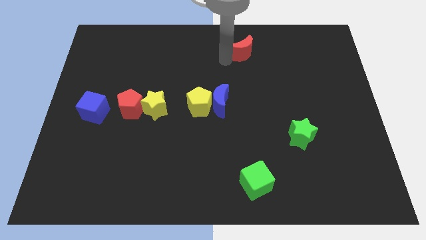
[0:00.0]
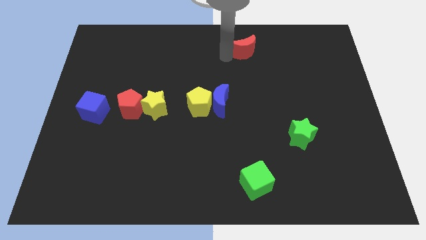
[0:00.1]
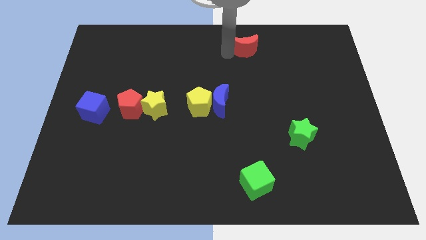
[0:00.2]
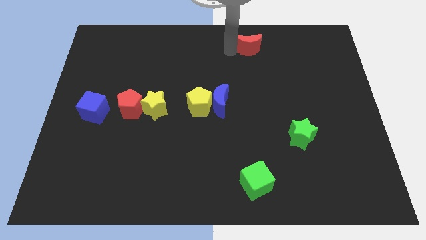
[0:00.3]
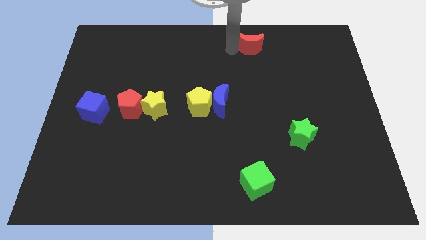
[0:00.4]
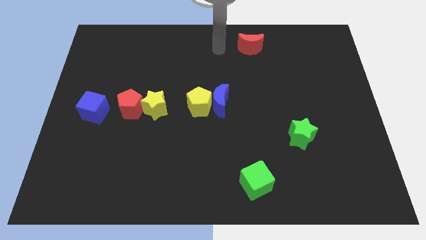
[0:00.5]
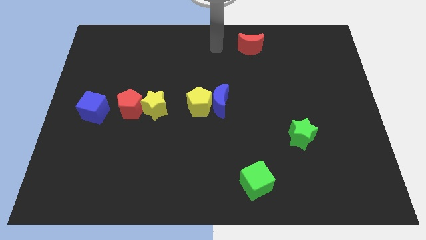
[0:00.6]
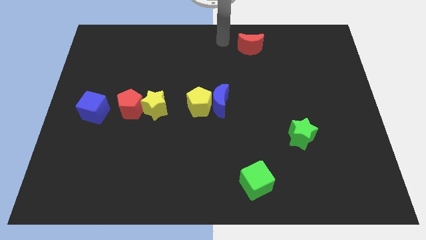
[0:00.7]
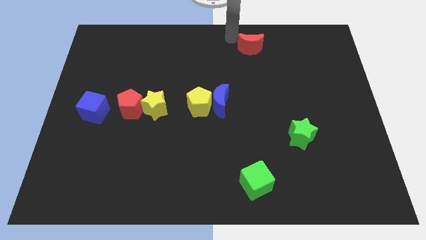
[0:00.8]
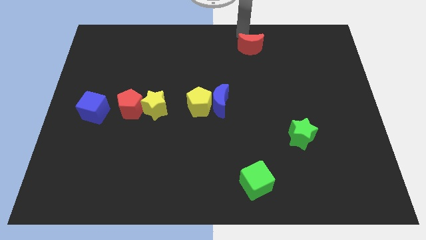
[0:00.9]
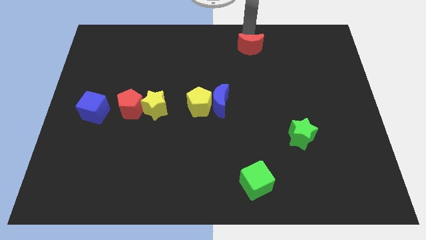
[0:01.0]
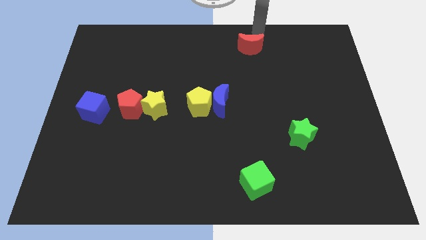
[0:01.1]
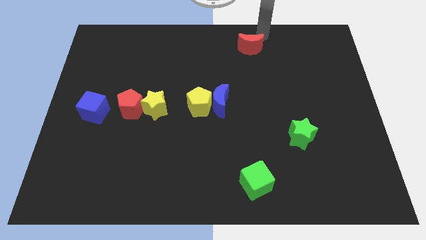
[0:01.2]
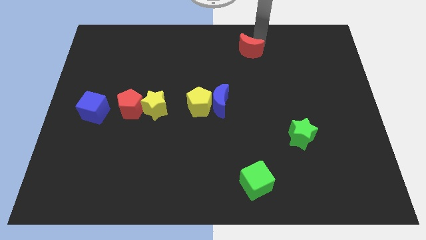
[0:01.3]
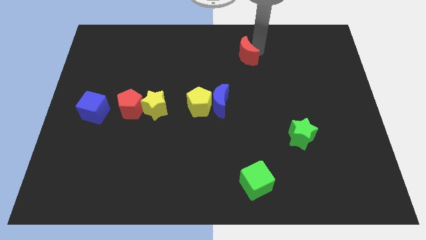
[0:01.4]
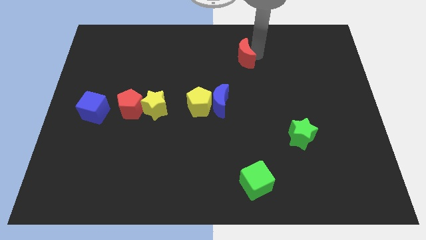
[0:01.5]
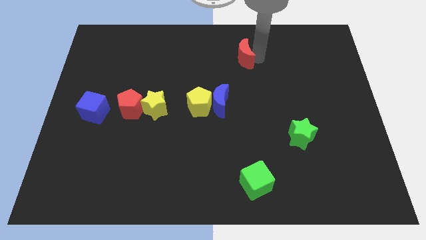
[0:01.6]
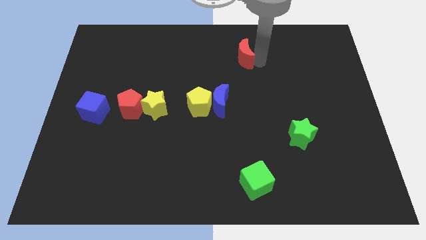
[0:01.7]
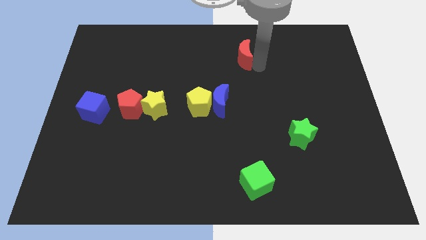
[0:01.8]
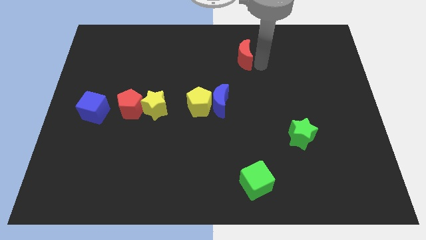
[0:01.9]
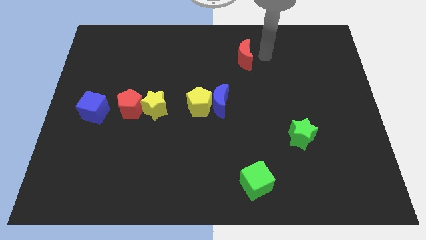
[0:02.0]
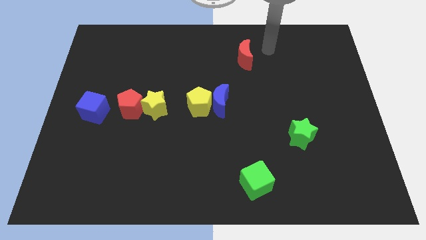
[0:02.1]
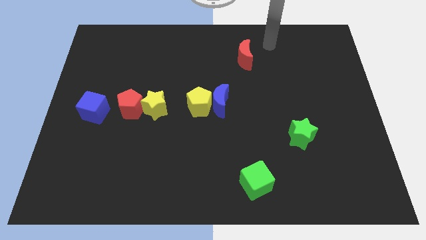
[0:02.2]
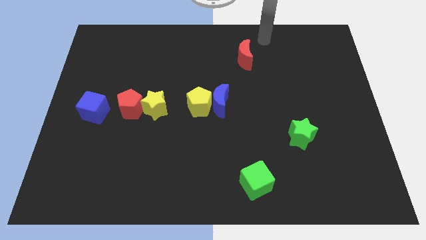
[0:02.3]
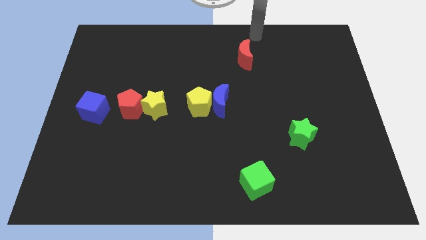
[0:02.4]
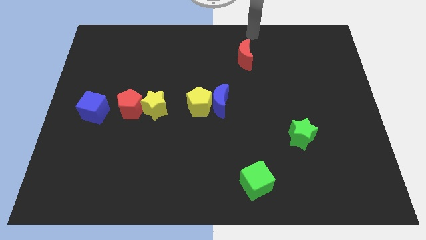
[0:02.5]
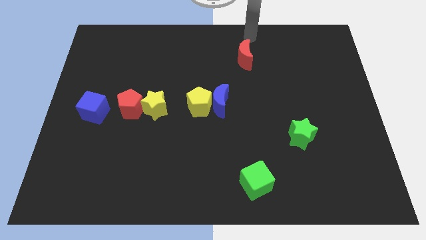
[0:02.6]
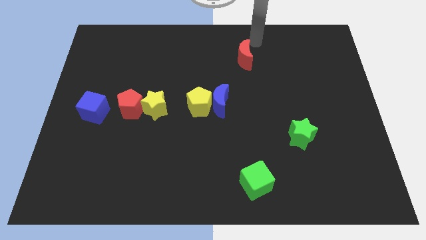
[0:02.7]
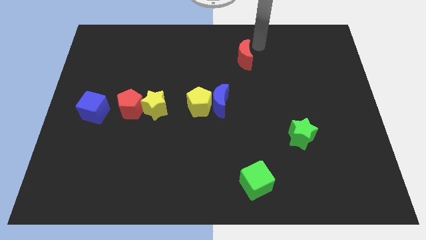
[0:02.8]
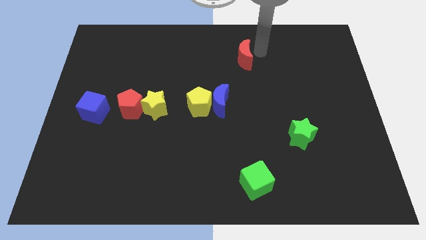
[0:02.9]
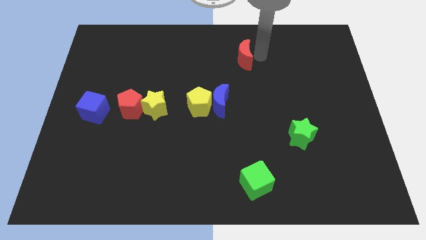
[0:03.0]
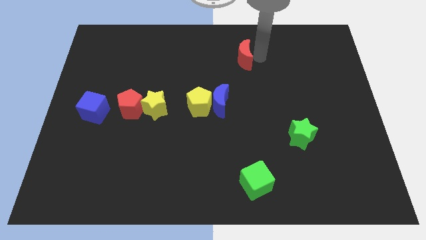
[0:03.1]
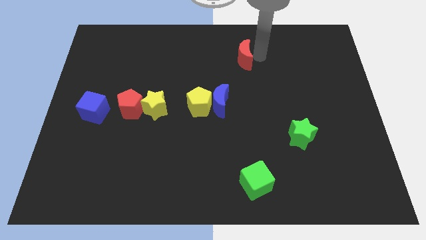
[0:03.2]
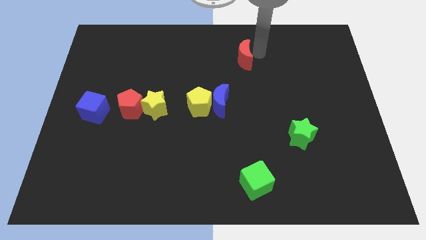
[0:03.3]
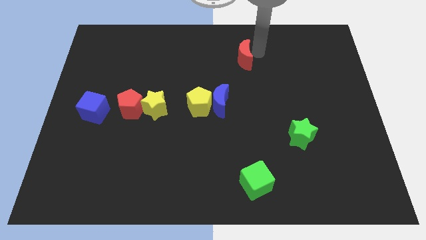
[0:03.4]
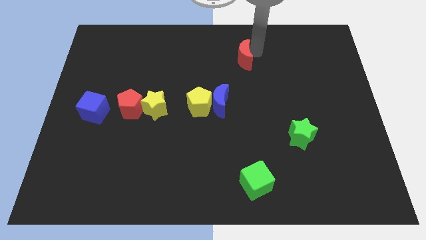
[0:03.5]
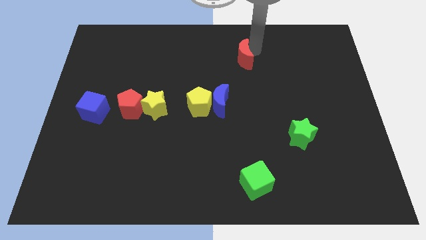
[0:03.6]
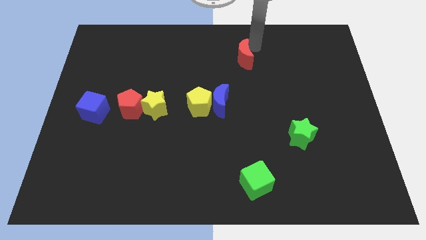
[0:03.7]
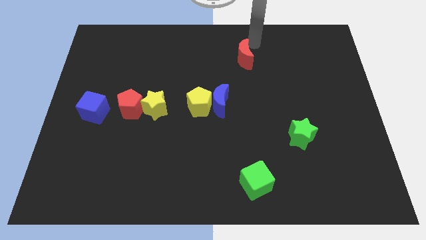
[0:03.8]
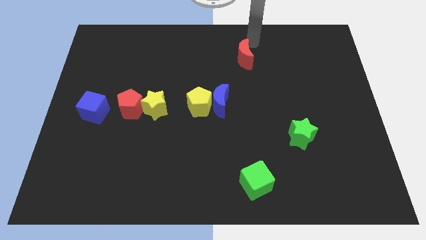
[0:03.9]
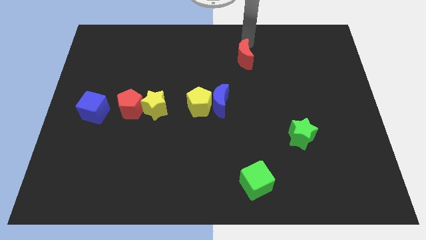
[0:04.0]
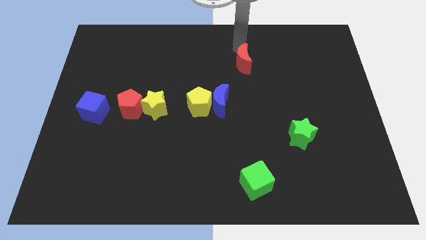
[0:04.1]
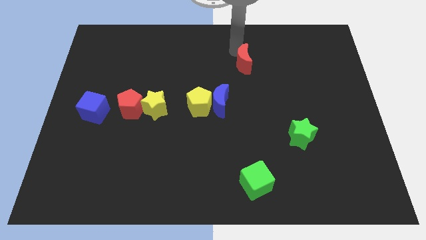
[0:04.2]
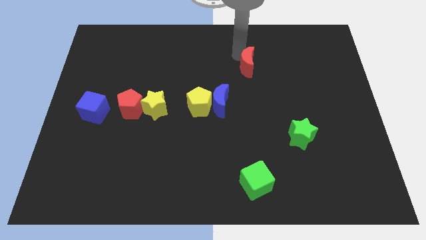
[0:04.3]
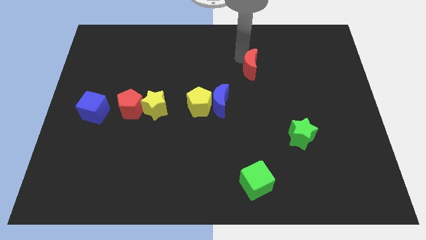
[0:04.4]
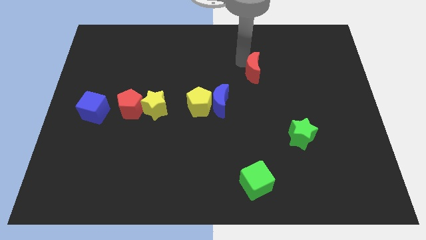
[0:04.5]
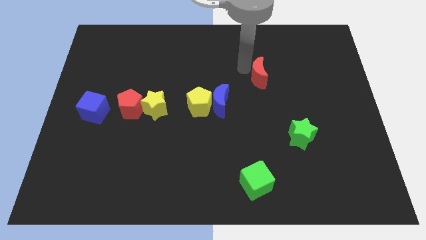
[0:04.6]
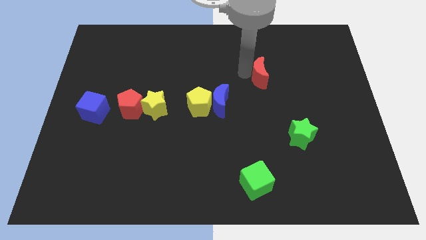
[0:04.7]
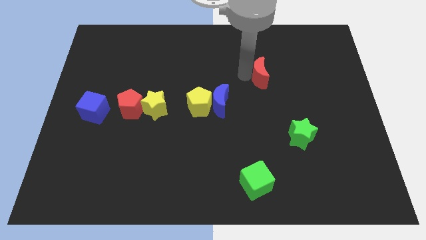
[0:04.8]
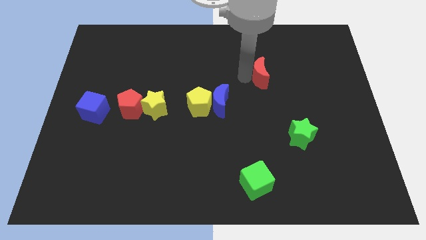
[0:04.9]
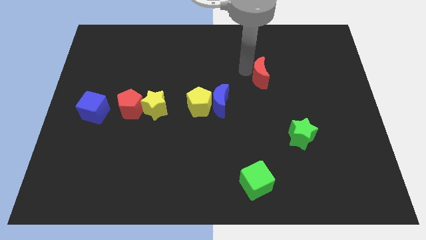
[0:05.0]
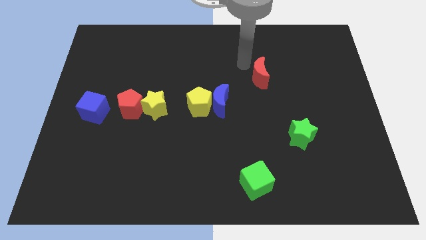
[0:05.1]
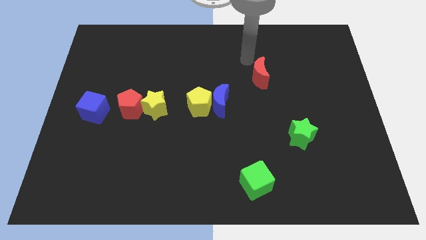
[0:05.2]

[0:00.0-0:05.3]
push the red crescent towards the green star

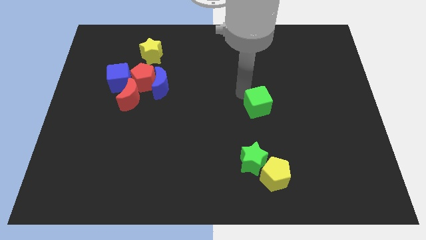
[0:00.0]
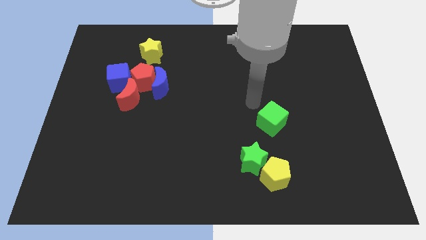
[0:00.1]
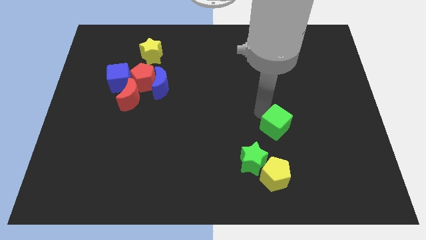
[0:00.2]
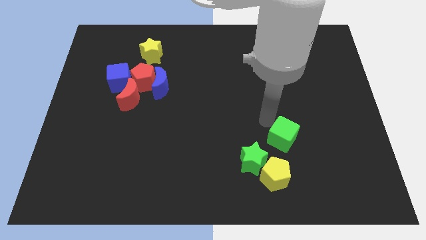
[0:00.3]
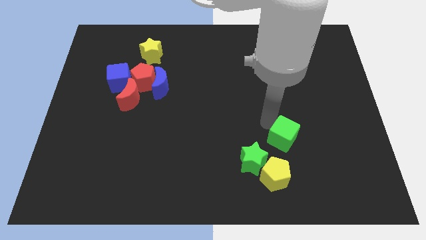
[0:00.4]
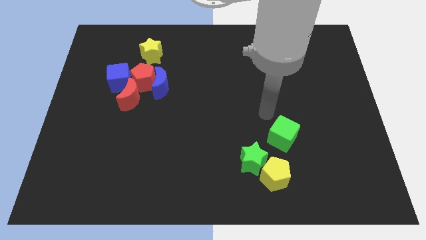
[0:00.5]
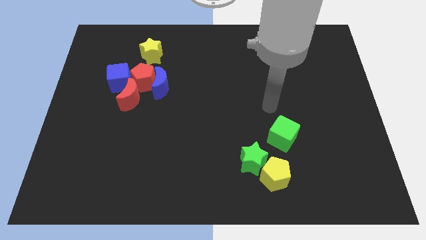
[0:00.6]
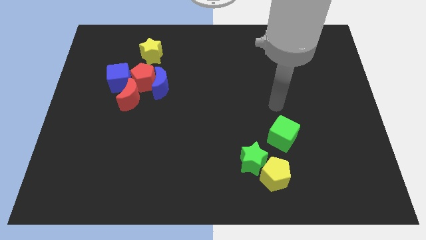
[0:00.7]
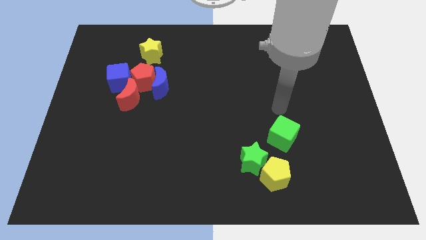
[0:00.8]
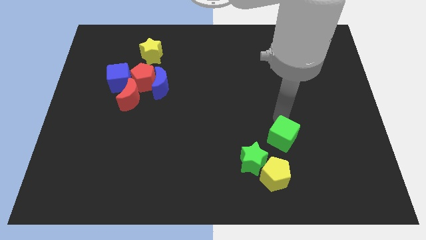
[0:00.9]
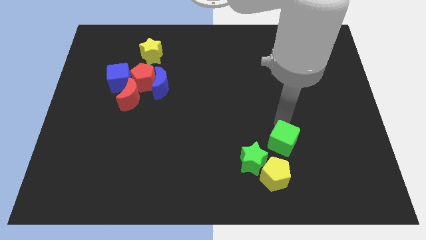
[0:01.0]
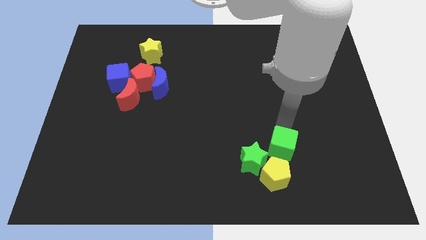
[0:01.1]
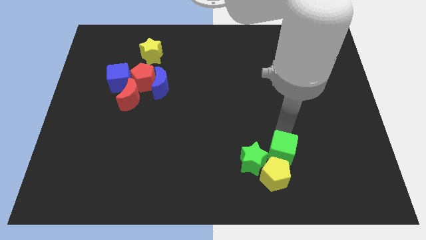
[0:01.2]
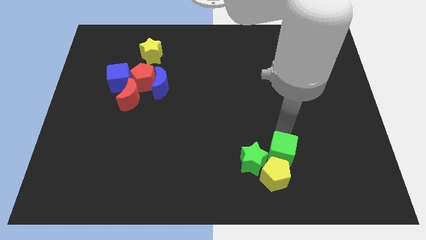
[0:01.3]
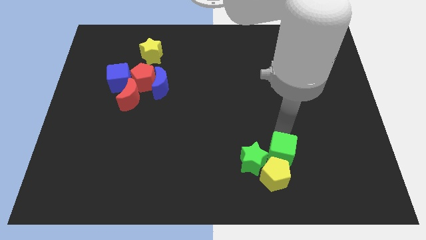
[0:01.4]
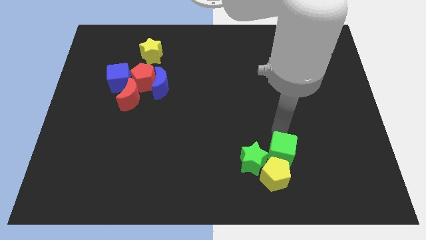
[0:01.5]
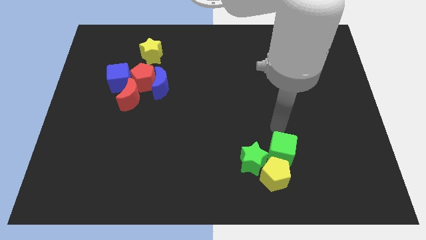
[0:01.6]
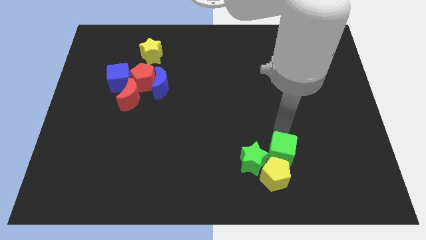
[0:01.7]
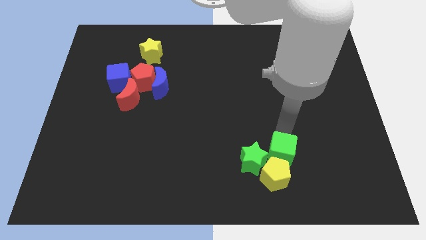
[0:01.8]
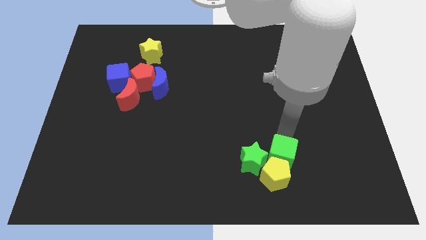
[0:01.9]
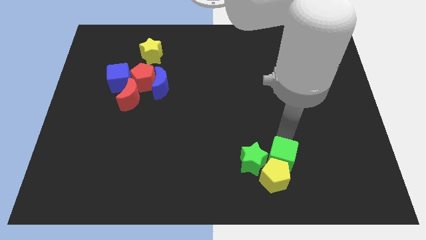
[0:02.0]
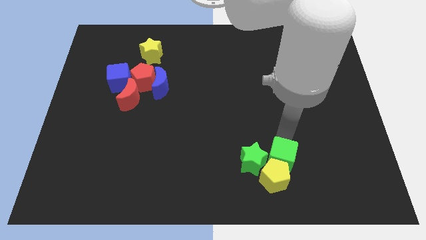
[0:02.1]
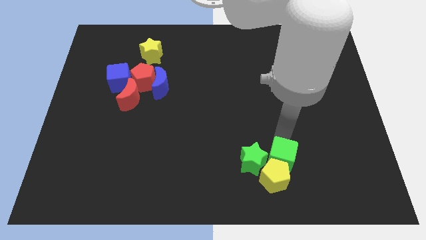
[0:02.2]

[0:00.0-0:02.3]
move the green cube into the yellow pentagon

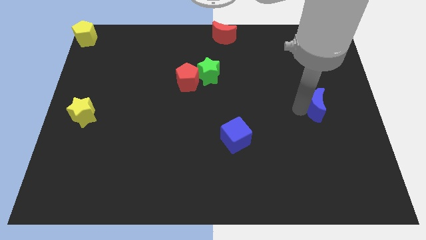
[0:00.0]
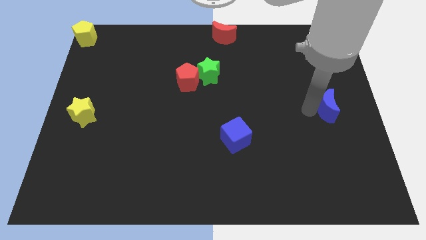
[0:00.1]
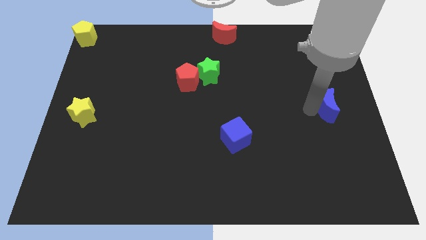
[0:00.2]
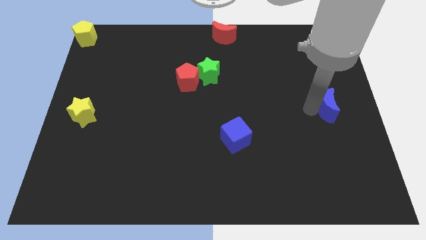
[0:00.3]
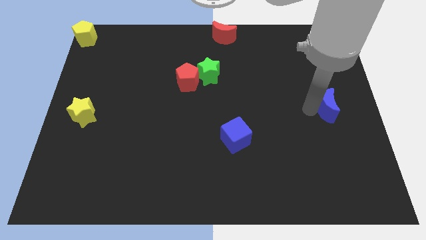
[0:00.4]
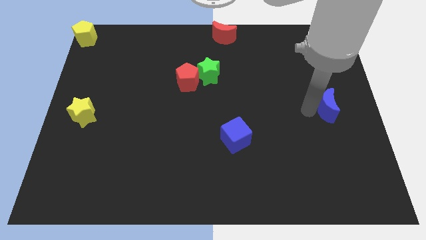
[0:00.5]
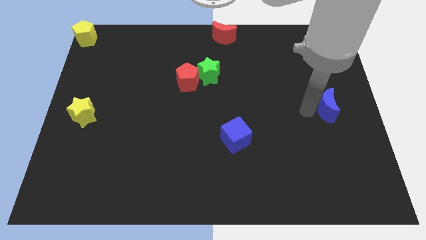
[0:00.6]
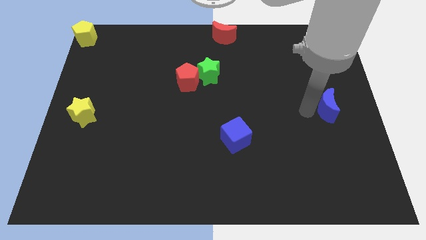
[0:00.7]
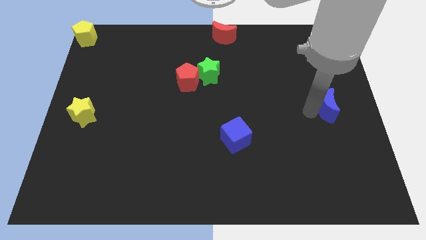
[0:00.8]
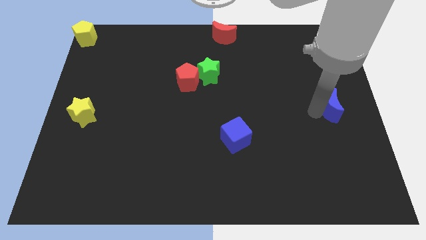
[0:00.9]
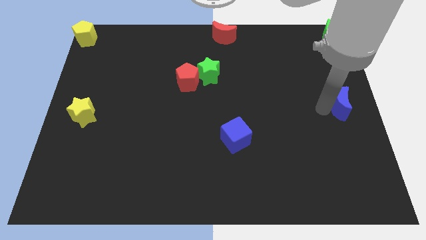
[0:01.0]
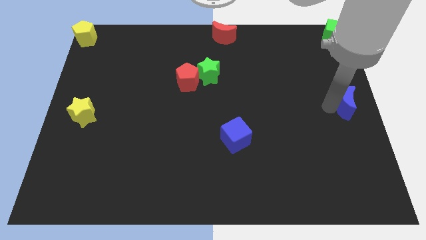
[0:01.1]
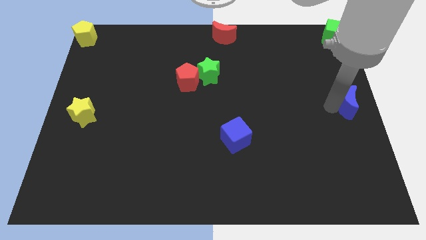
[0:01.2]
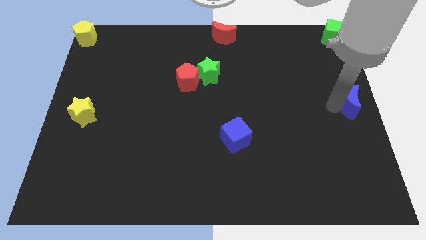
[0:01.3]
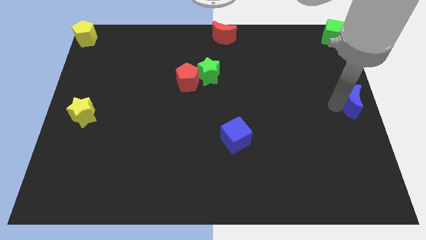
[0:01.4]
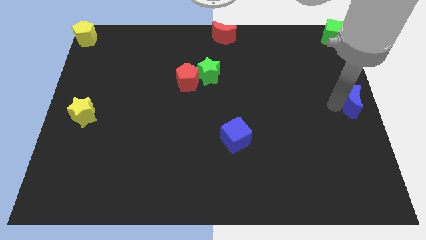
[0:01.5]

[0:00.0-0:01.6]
push the blue crescent to the right center of the board
